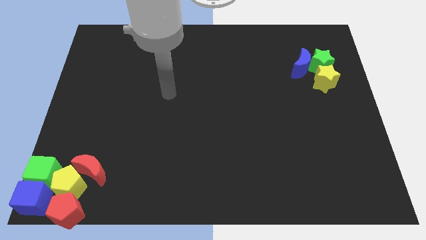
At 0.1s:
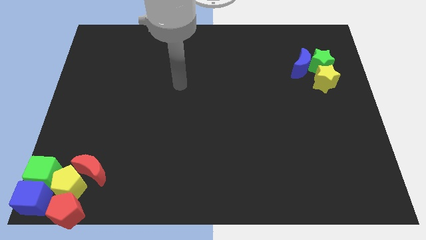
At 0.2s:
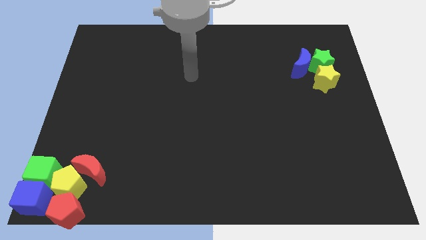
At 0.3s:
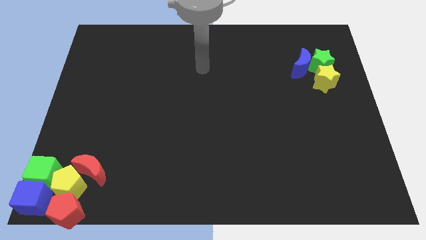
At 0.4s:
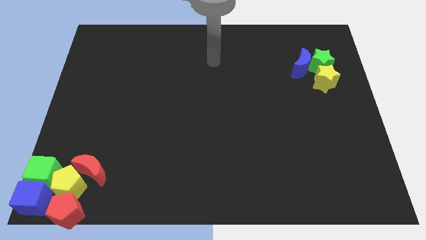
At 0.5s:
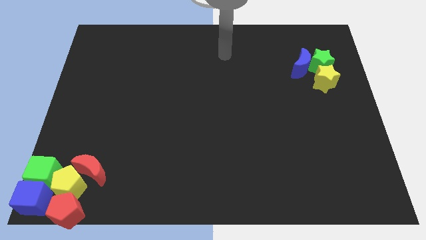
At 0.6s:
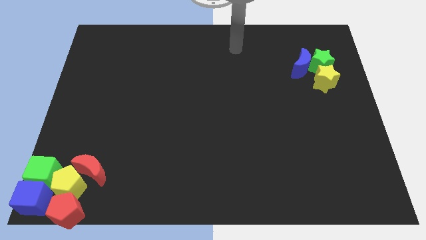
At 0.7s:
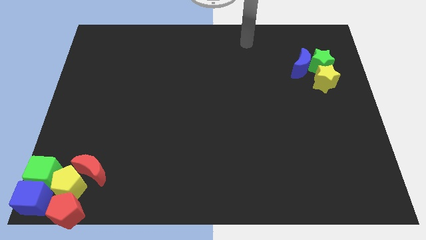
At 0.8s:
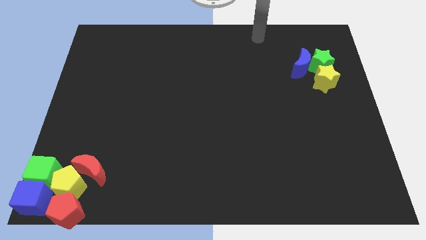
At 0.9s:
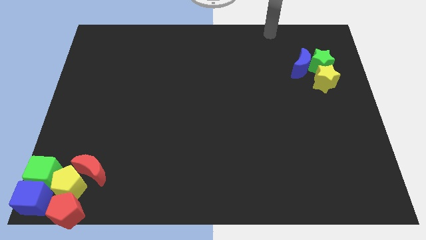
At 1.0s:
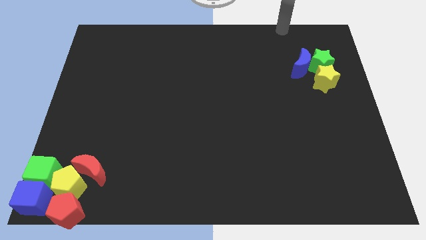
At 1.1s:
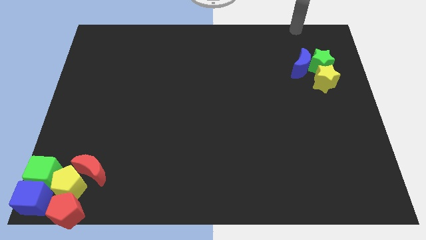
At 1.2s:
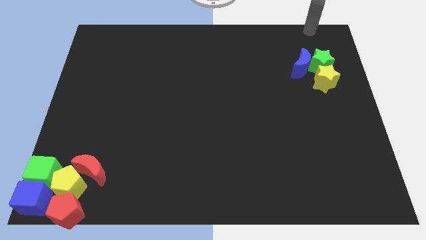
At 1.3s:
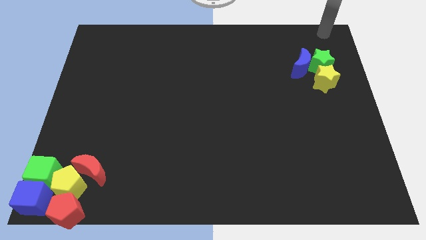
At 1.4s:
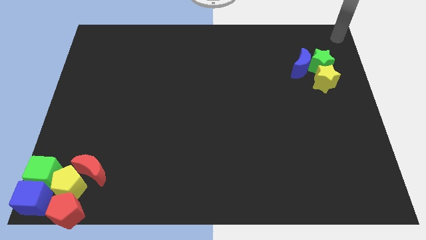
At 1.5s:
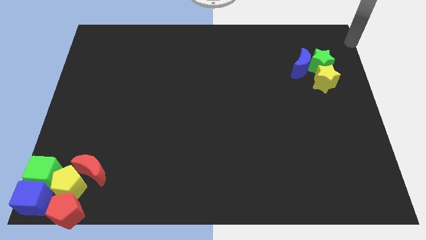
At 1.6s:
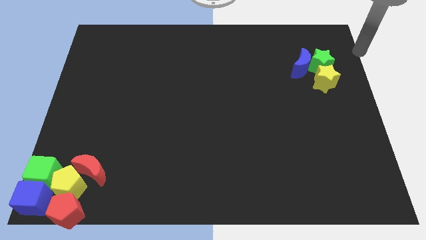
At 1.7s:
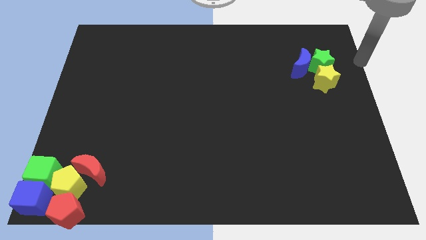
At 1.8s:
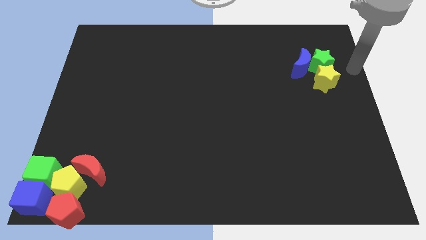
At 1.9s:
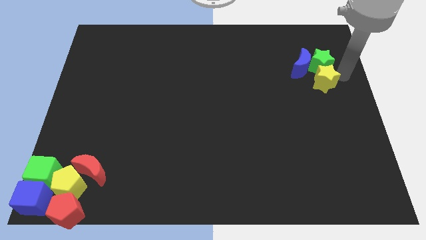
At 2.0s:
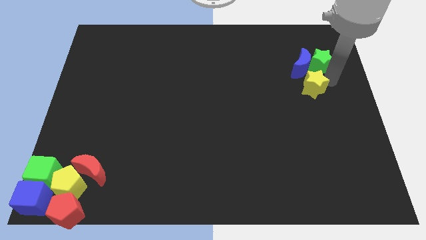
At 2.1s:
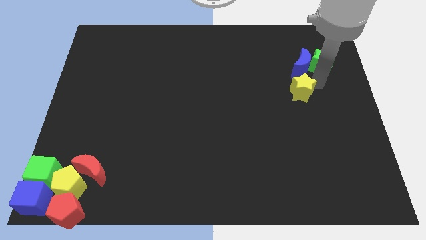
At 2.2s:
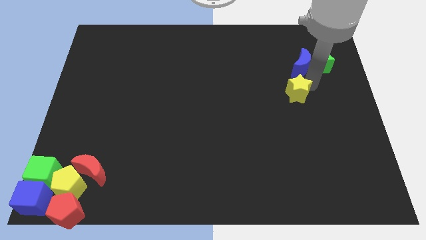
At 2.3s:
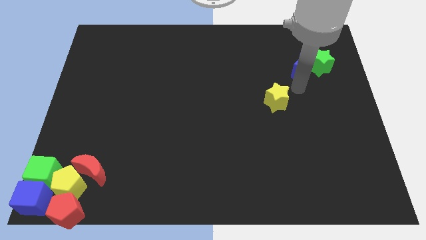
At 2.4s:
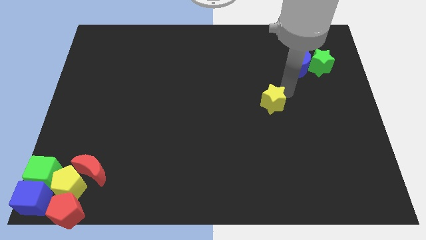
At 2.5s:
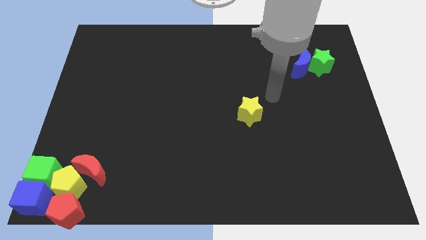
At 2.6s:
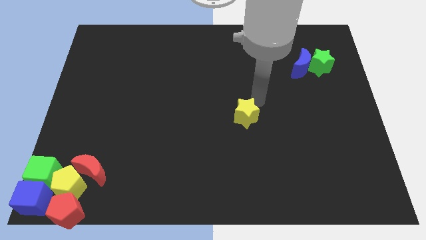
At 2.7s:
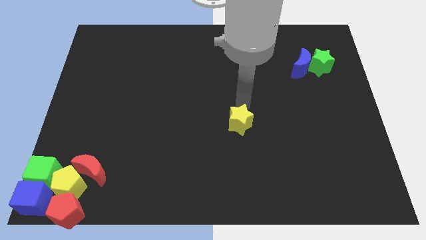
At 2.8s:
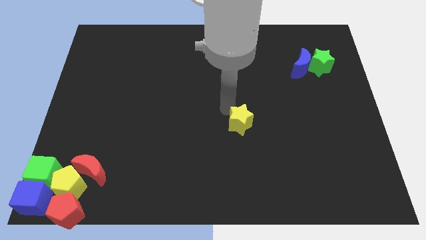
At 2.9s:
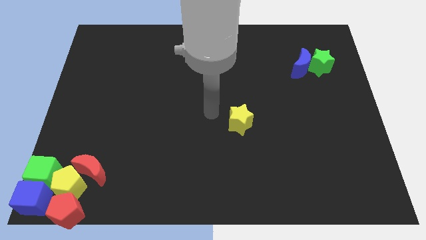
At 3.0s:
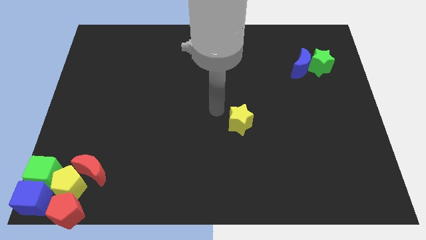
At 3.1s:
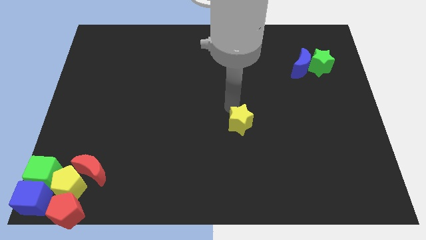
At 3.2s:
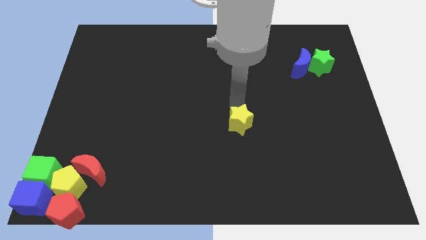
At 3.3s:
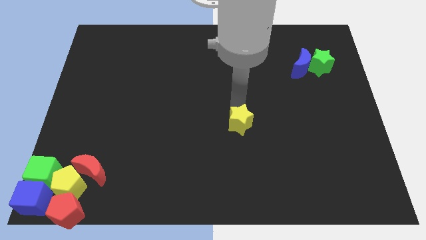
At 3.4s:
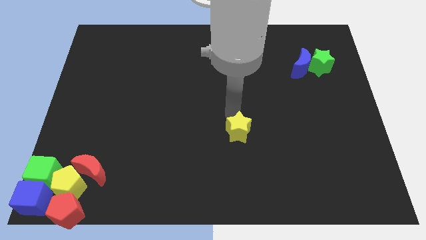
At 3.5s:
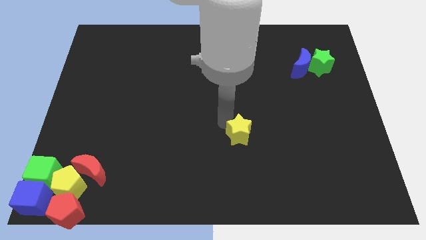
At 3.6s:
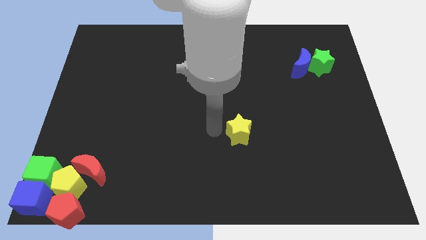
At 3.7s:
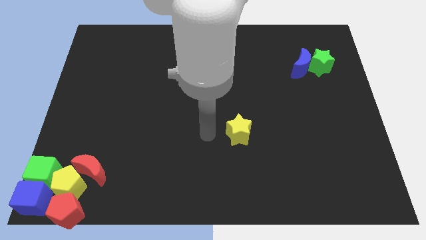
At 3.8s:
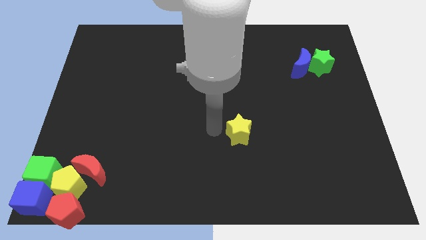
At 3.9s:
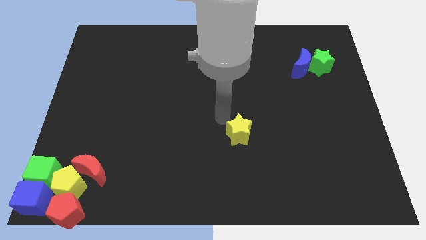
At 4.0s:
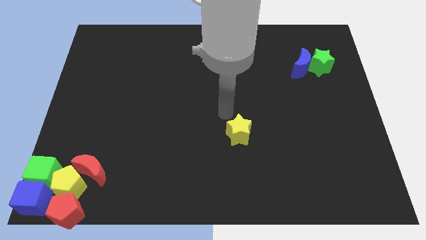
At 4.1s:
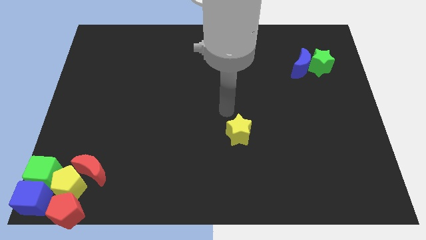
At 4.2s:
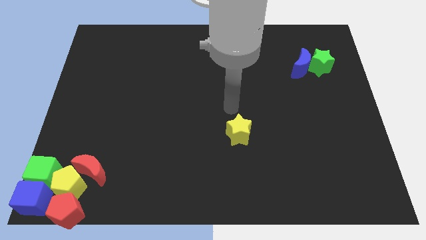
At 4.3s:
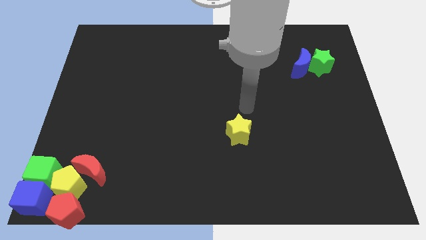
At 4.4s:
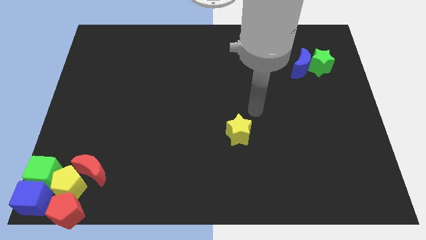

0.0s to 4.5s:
separate the yellow star from the green star

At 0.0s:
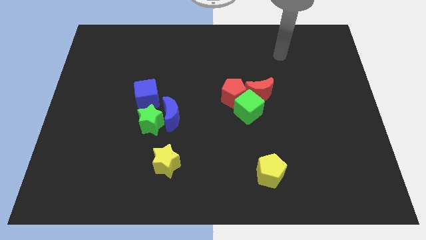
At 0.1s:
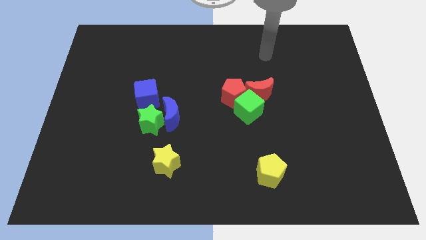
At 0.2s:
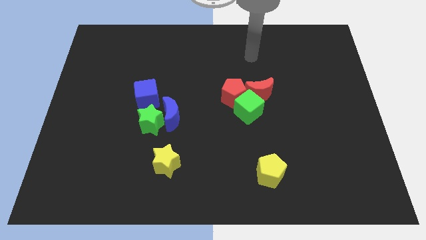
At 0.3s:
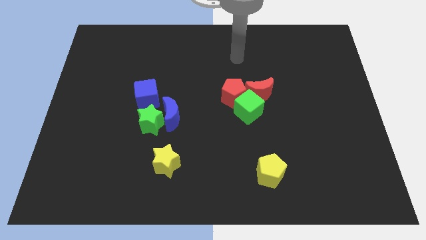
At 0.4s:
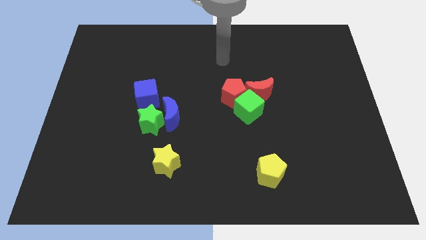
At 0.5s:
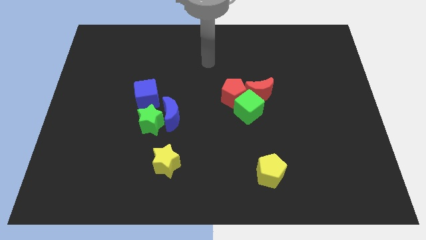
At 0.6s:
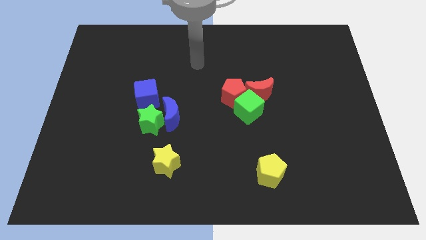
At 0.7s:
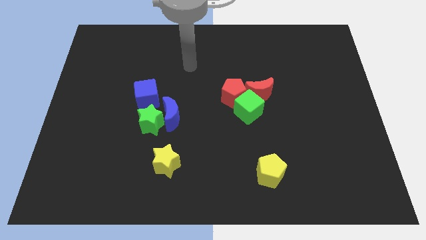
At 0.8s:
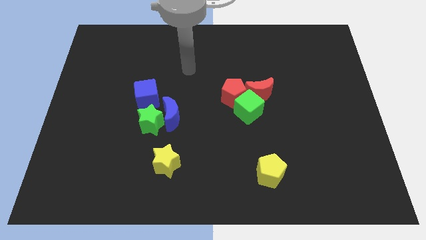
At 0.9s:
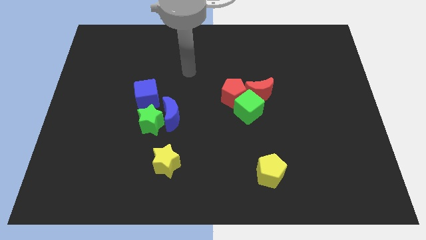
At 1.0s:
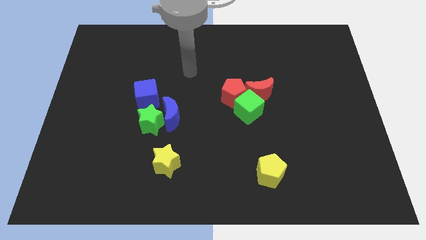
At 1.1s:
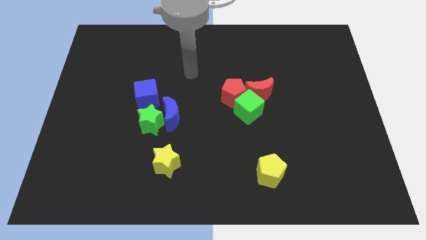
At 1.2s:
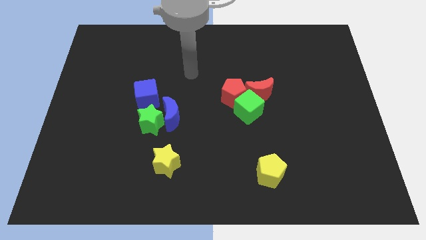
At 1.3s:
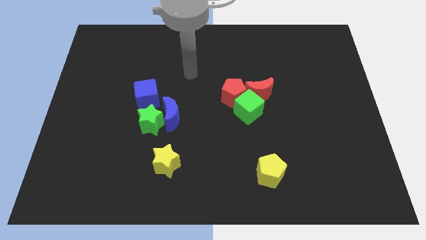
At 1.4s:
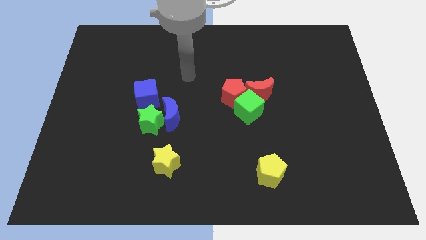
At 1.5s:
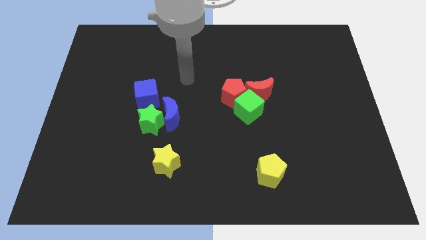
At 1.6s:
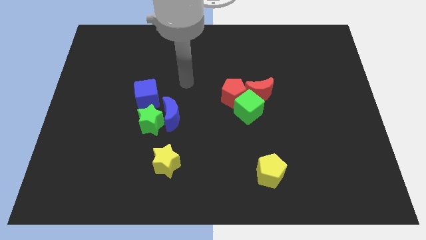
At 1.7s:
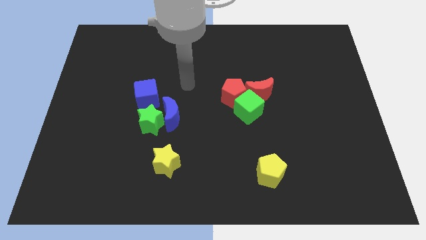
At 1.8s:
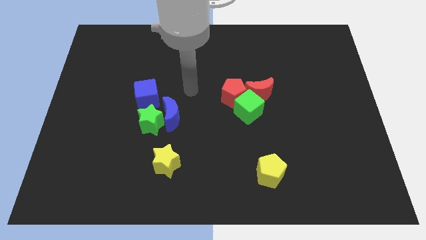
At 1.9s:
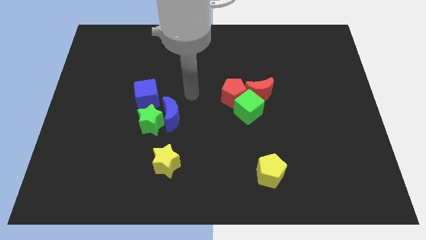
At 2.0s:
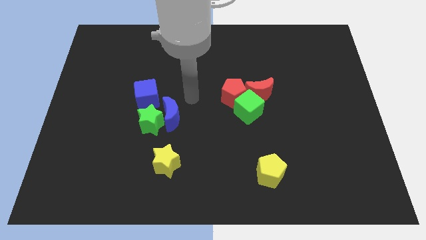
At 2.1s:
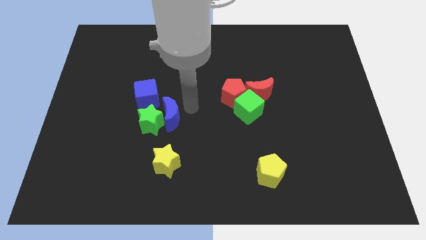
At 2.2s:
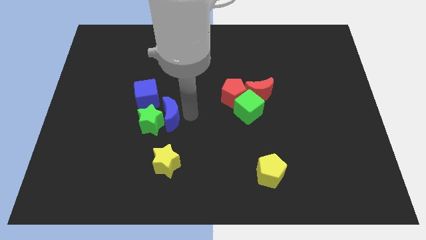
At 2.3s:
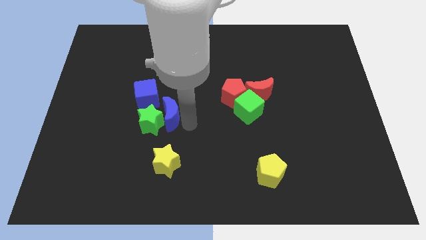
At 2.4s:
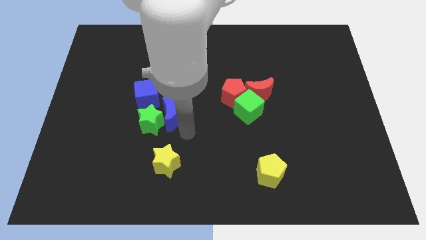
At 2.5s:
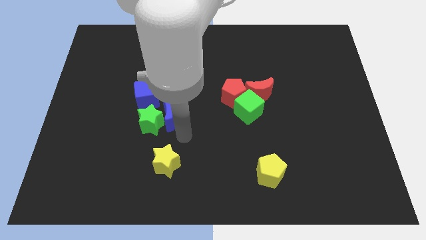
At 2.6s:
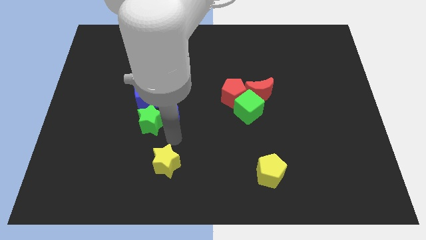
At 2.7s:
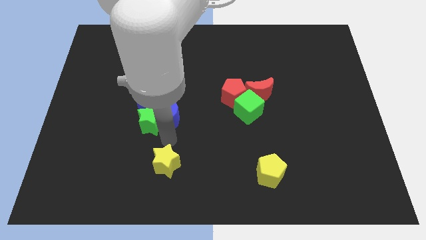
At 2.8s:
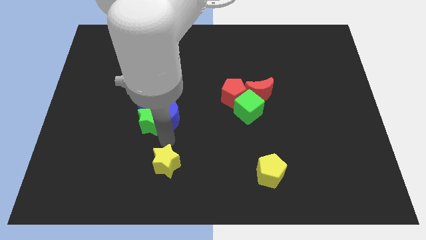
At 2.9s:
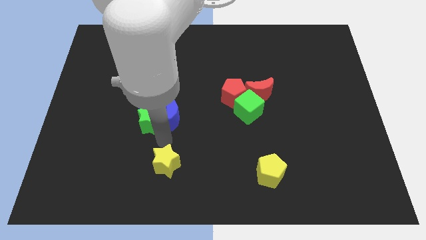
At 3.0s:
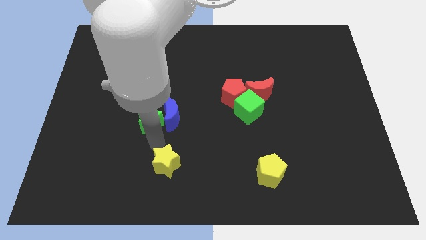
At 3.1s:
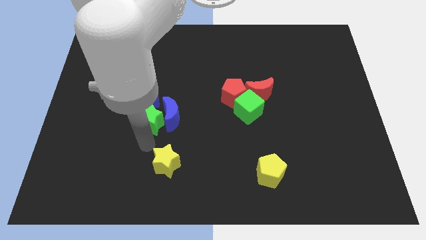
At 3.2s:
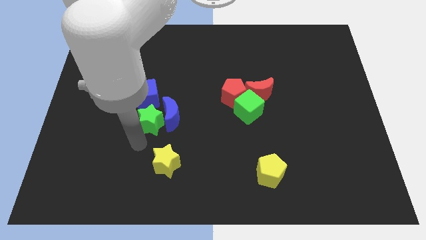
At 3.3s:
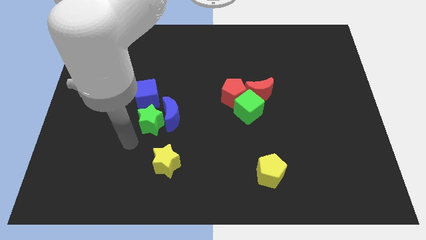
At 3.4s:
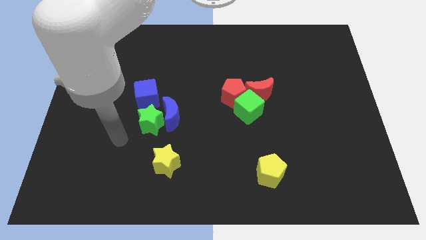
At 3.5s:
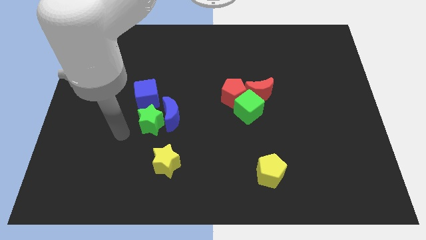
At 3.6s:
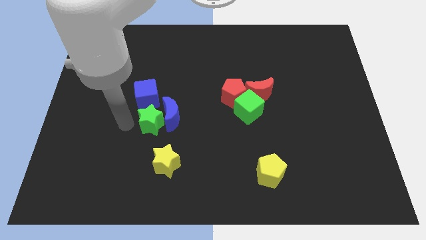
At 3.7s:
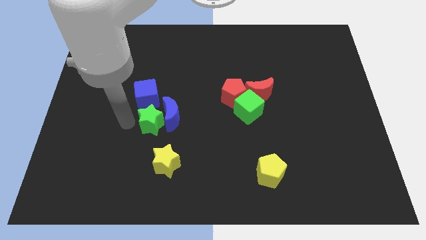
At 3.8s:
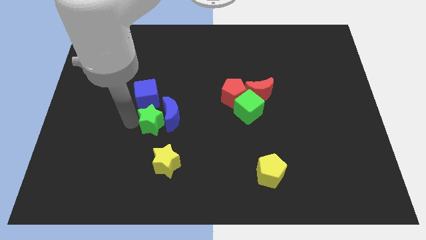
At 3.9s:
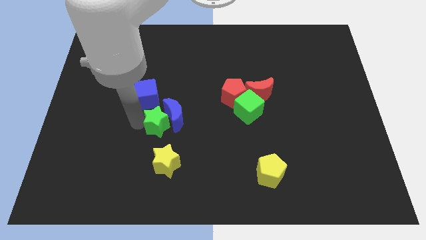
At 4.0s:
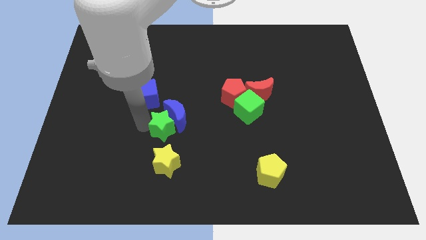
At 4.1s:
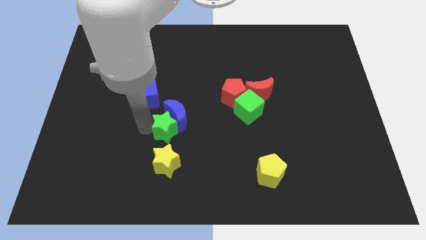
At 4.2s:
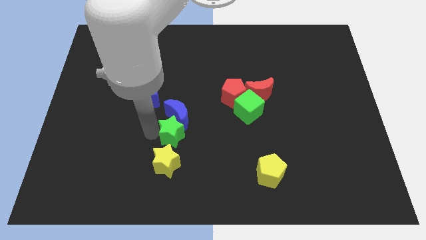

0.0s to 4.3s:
place the green star in between blue crescent and yellow star

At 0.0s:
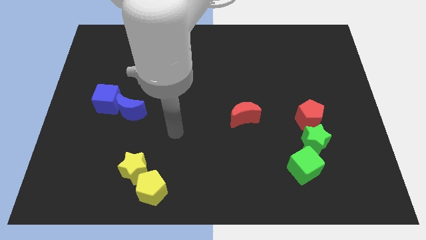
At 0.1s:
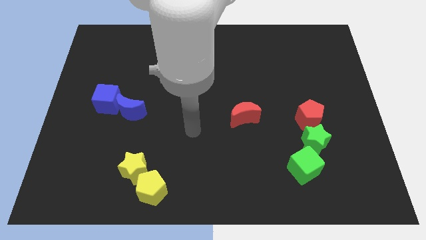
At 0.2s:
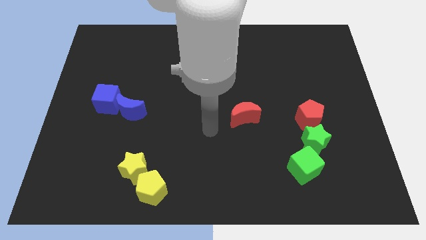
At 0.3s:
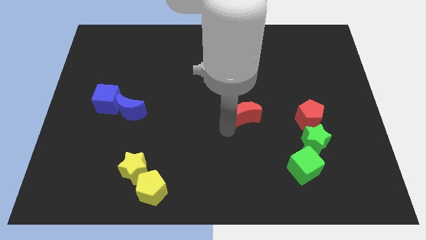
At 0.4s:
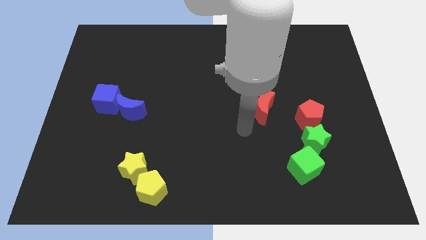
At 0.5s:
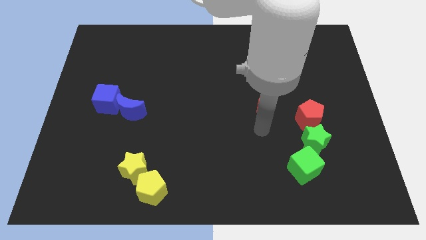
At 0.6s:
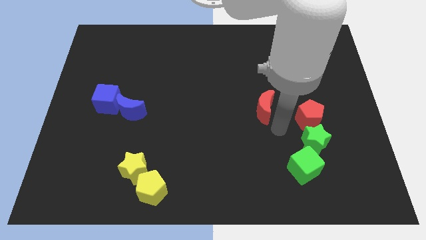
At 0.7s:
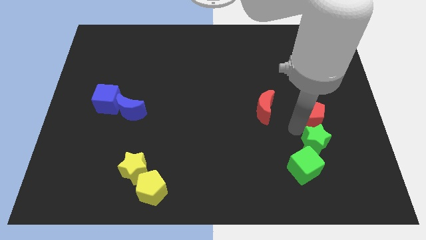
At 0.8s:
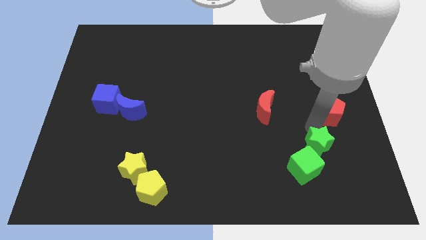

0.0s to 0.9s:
separate the red pentagon and green star
